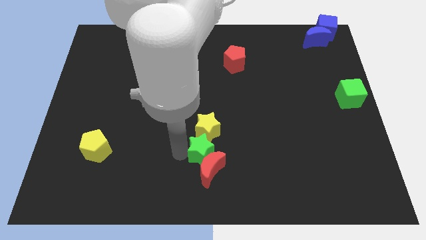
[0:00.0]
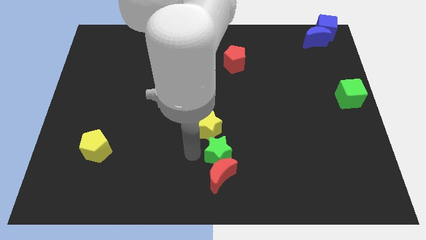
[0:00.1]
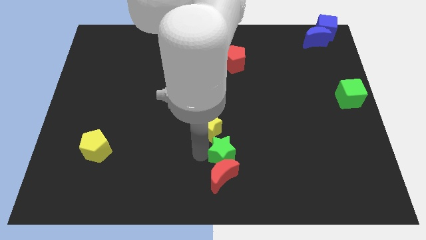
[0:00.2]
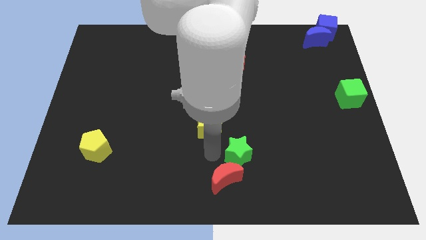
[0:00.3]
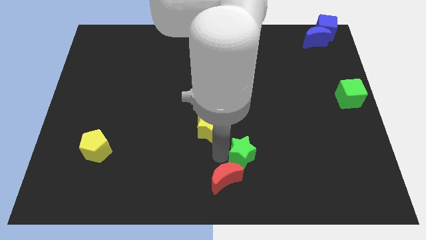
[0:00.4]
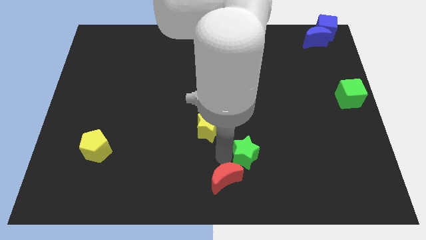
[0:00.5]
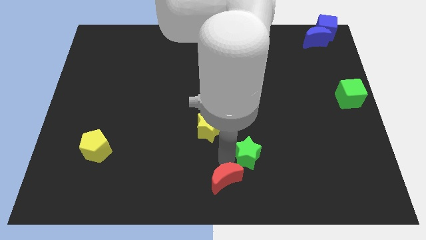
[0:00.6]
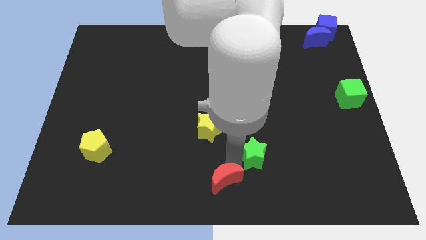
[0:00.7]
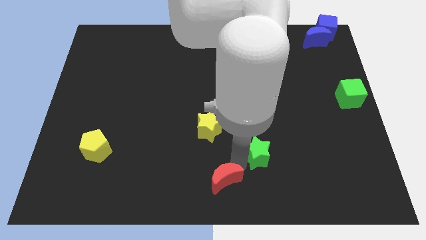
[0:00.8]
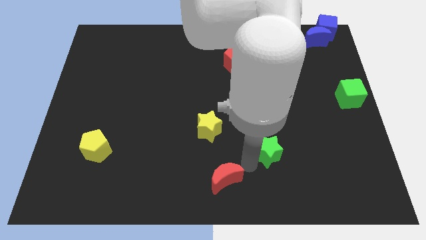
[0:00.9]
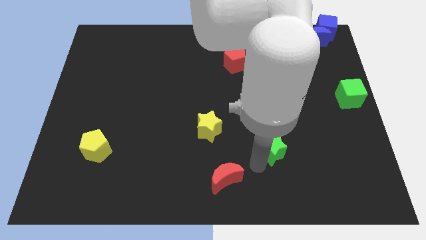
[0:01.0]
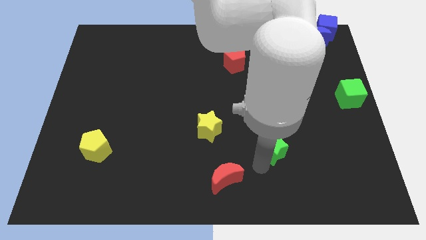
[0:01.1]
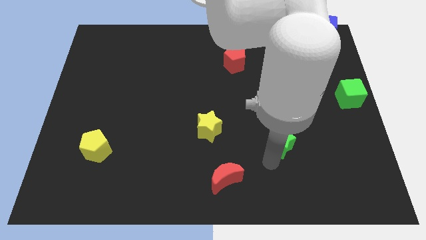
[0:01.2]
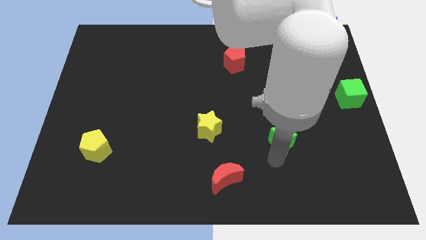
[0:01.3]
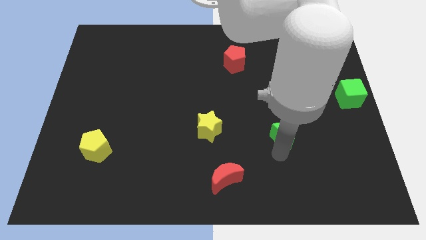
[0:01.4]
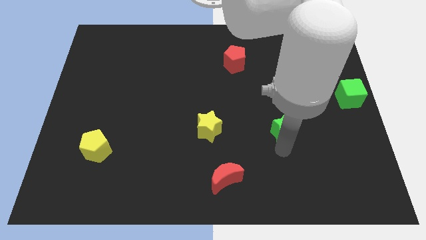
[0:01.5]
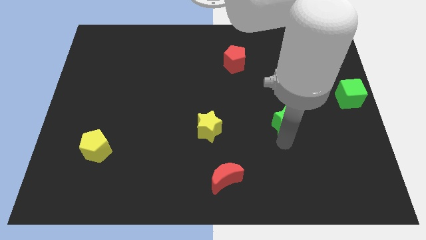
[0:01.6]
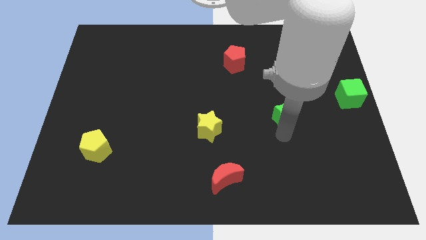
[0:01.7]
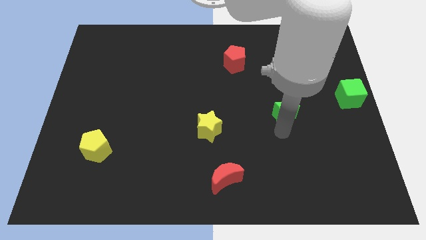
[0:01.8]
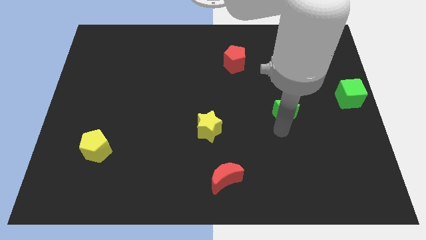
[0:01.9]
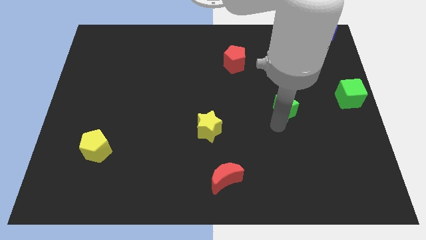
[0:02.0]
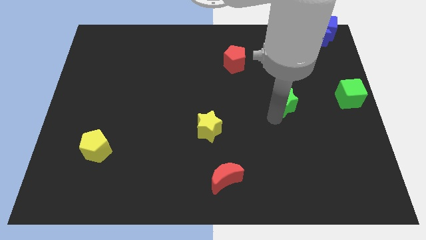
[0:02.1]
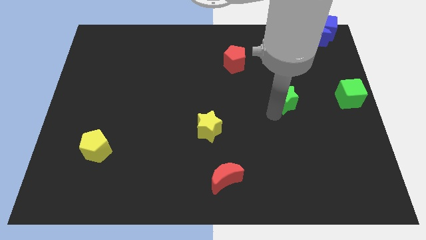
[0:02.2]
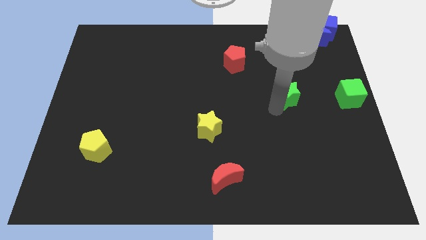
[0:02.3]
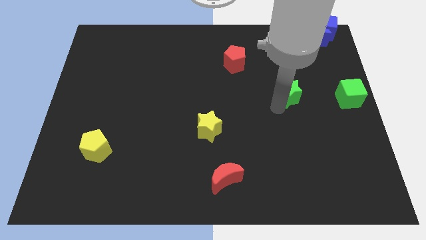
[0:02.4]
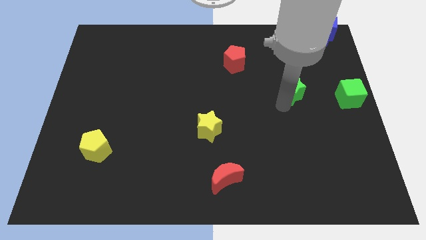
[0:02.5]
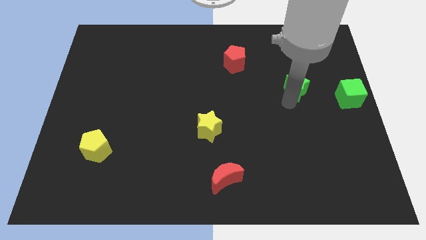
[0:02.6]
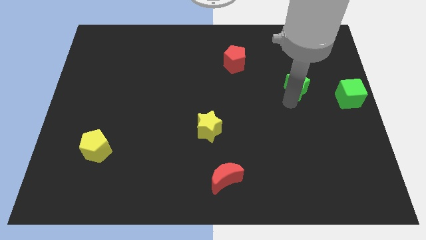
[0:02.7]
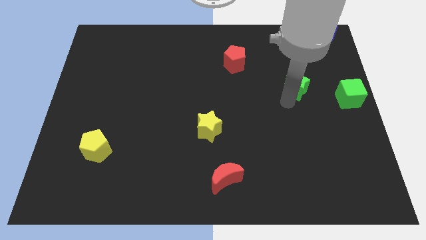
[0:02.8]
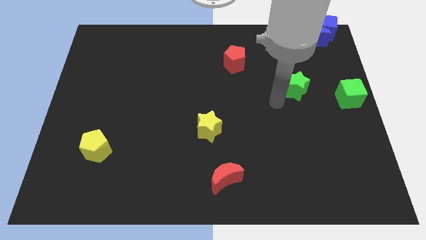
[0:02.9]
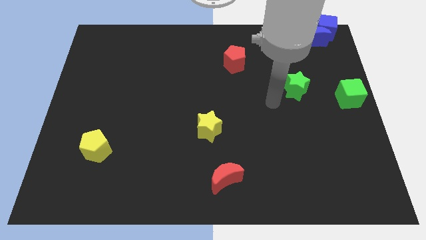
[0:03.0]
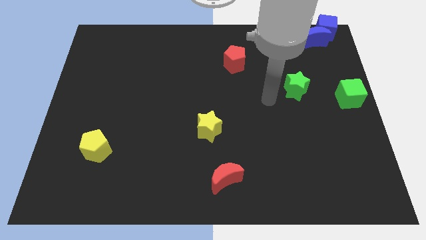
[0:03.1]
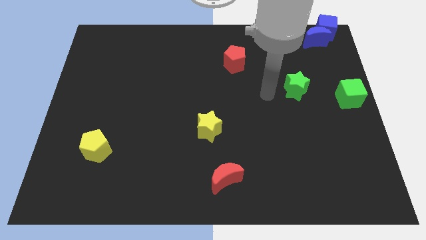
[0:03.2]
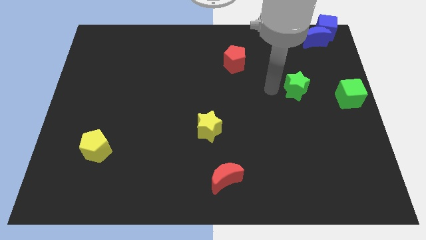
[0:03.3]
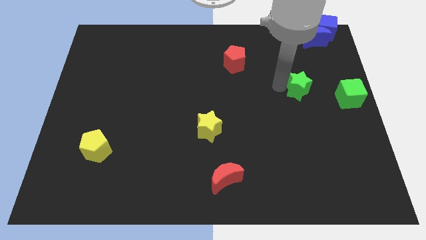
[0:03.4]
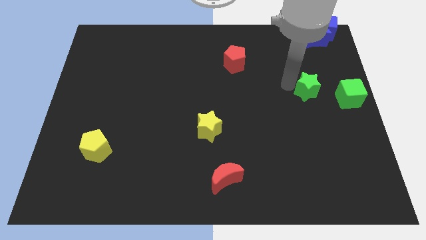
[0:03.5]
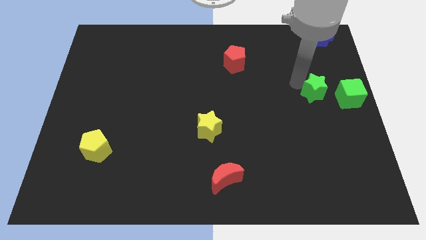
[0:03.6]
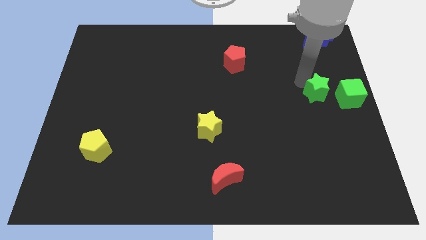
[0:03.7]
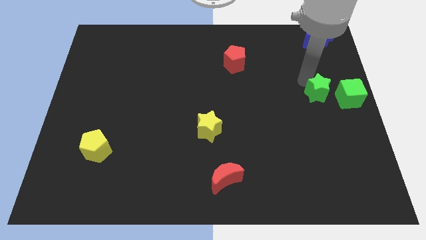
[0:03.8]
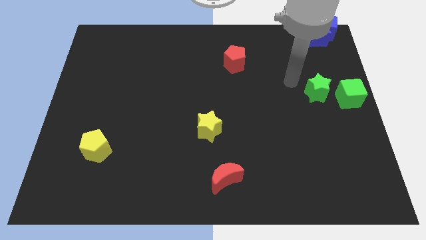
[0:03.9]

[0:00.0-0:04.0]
move the green star towards the left side of the green cube

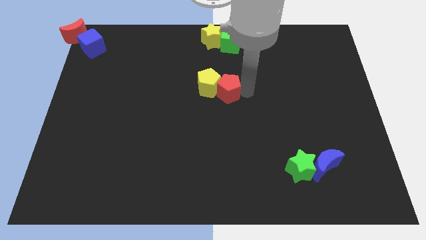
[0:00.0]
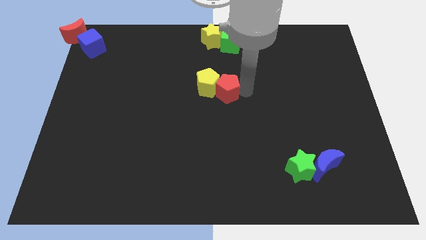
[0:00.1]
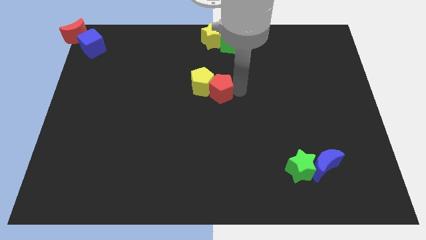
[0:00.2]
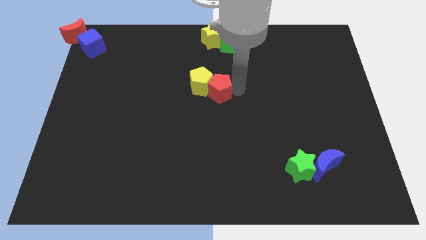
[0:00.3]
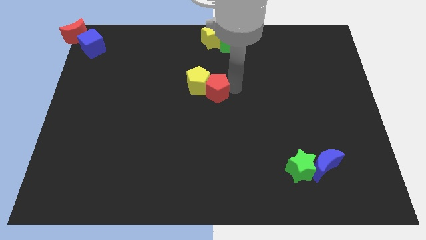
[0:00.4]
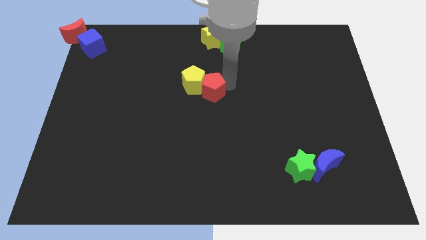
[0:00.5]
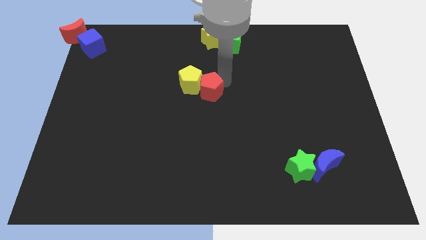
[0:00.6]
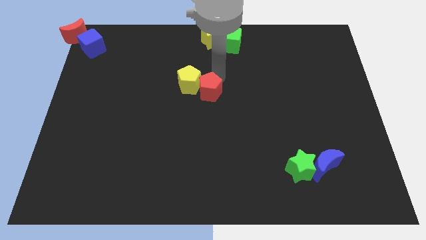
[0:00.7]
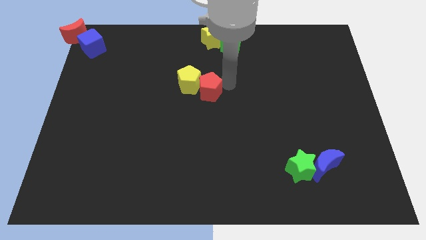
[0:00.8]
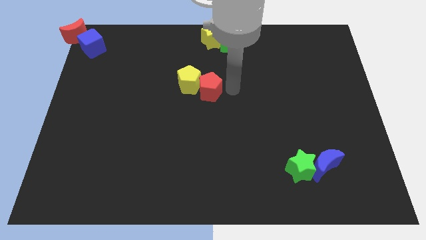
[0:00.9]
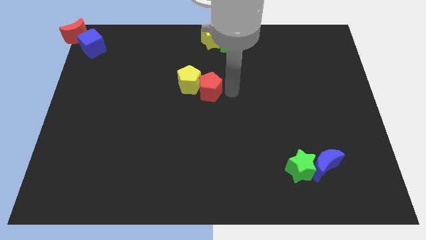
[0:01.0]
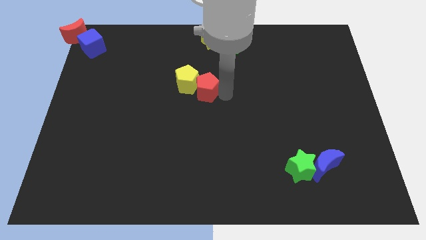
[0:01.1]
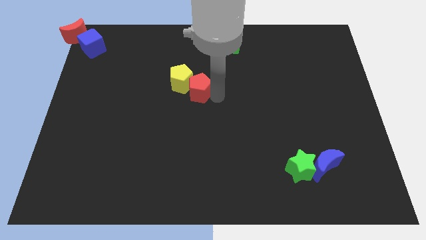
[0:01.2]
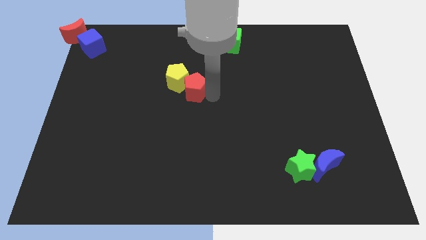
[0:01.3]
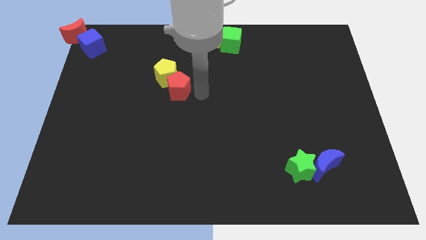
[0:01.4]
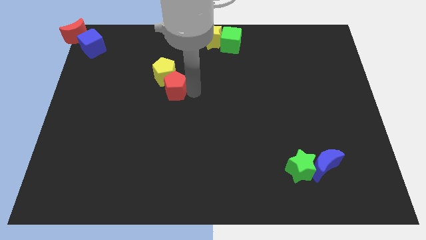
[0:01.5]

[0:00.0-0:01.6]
move the yellow and red pentagons towards the blue cube

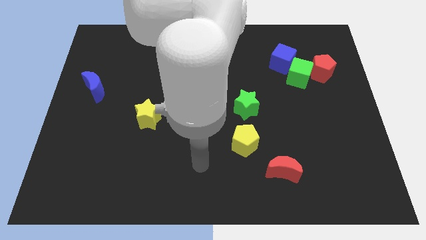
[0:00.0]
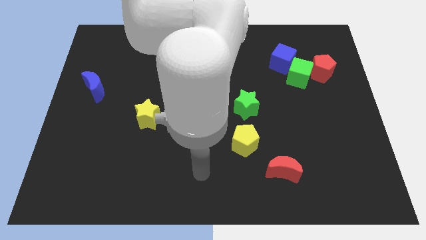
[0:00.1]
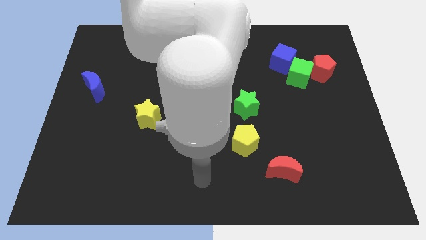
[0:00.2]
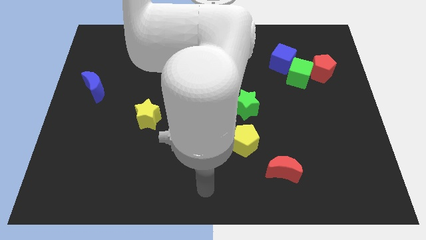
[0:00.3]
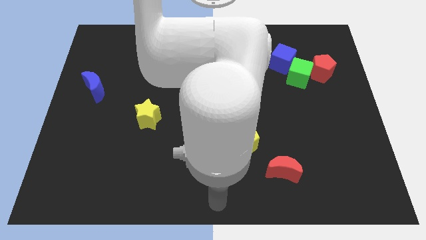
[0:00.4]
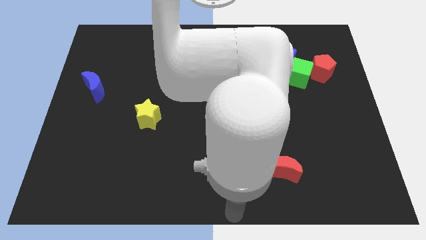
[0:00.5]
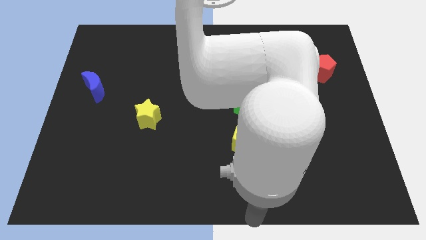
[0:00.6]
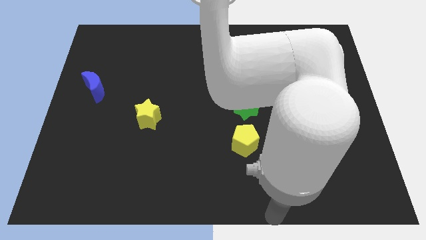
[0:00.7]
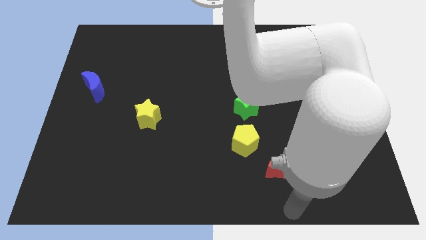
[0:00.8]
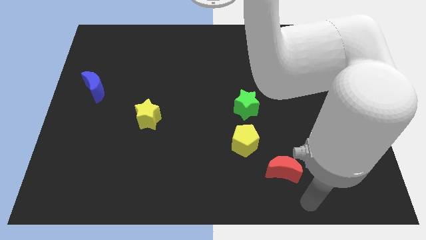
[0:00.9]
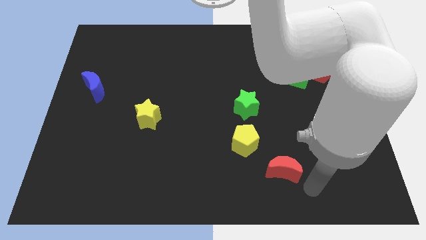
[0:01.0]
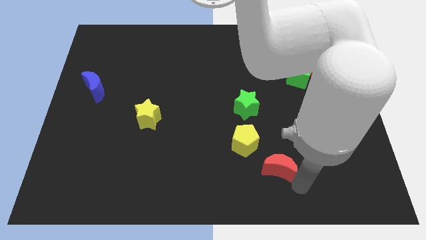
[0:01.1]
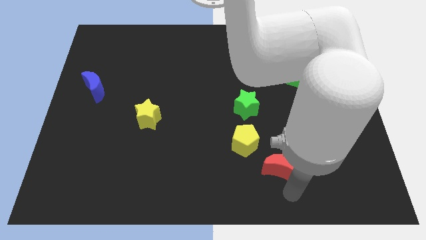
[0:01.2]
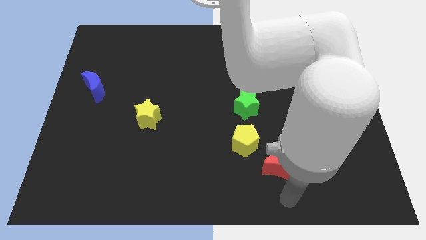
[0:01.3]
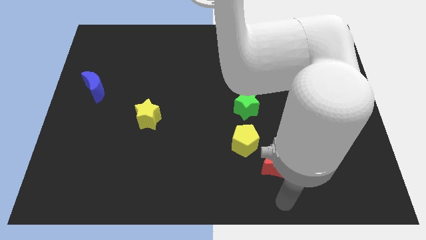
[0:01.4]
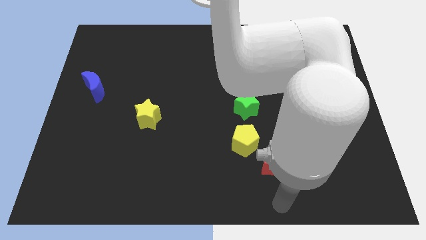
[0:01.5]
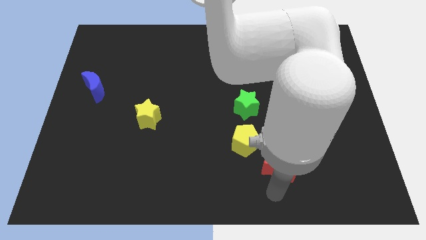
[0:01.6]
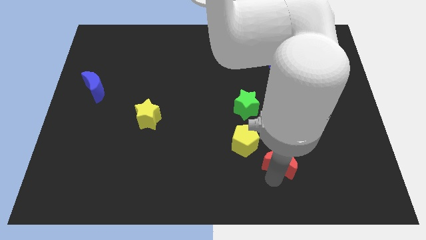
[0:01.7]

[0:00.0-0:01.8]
move your arm towards the red crescent

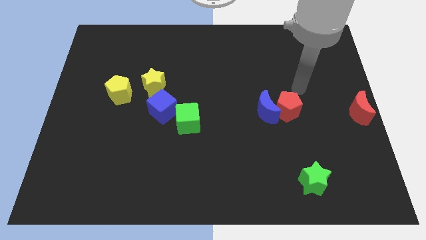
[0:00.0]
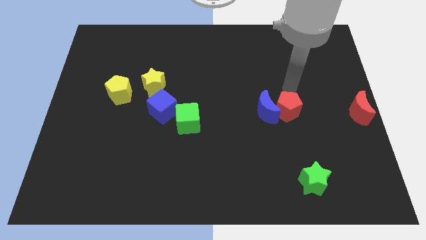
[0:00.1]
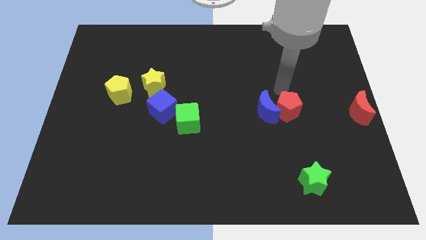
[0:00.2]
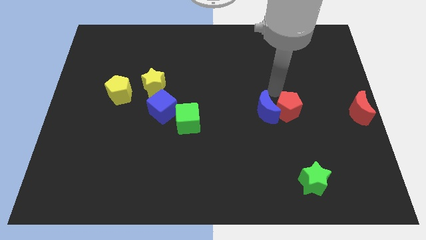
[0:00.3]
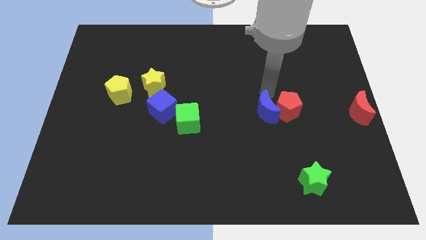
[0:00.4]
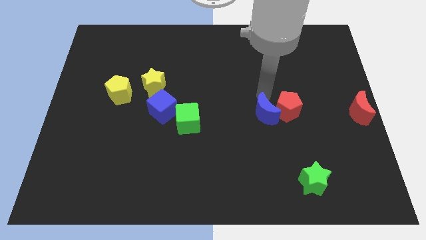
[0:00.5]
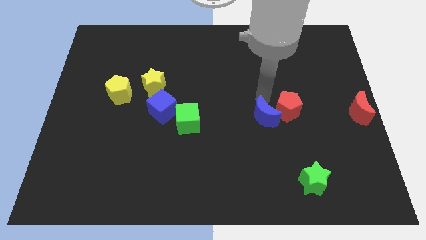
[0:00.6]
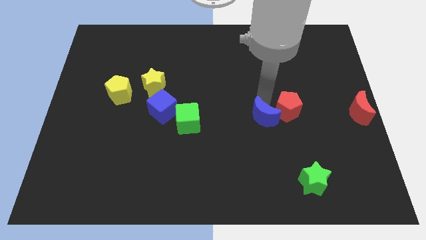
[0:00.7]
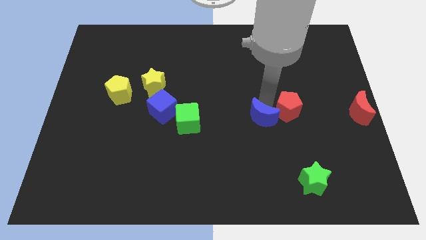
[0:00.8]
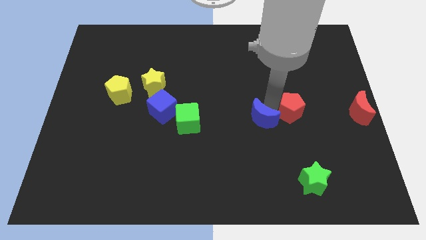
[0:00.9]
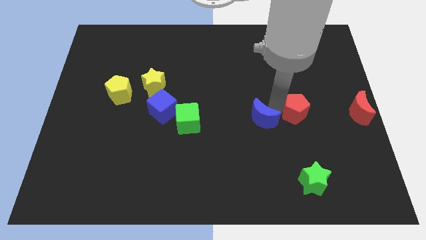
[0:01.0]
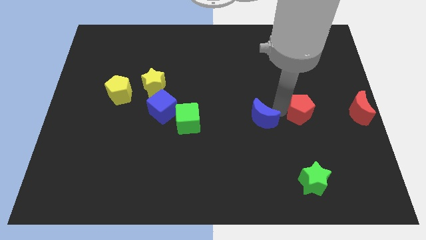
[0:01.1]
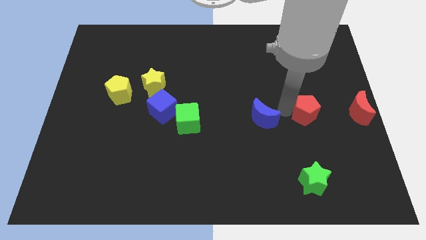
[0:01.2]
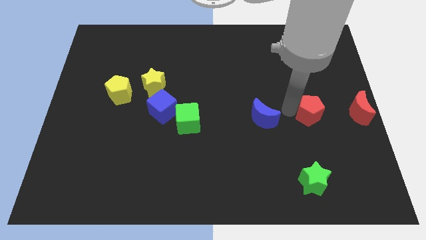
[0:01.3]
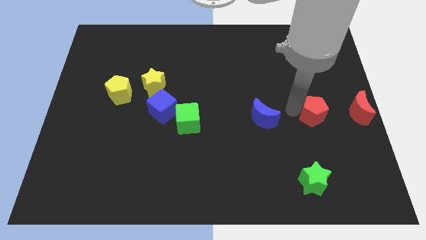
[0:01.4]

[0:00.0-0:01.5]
separate red pentagon from blue moon

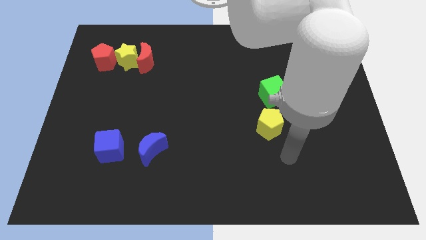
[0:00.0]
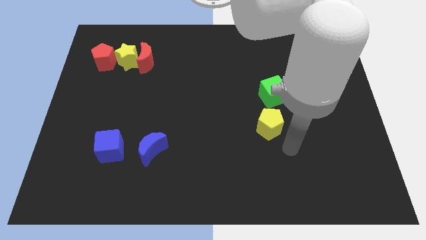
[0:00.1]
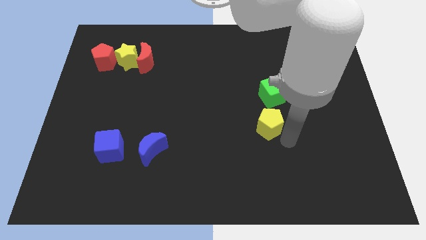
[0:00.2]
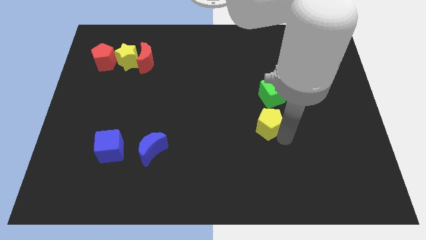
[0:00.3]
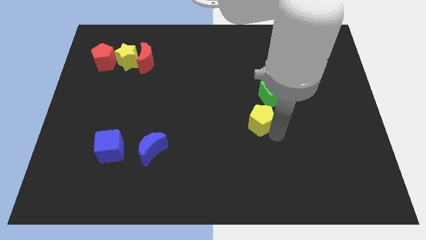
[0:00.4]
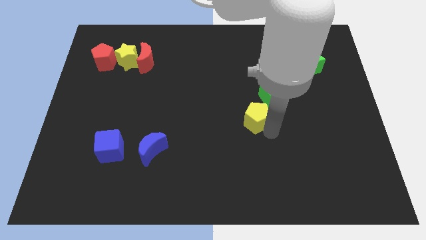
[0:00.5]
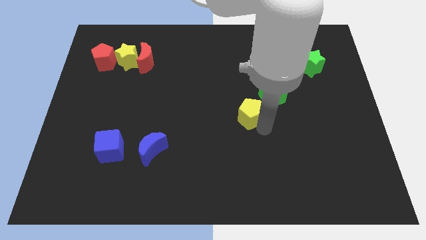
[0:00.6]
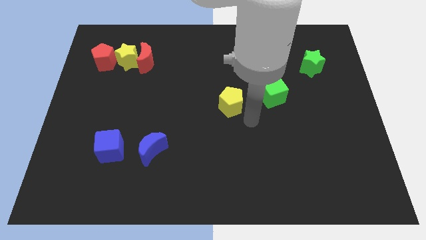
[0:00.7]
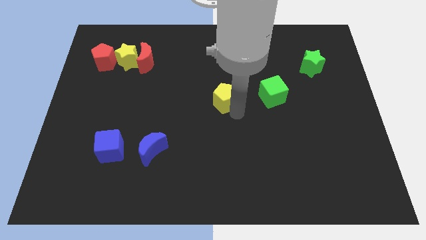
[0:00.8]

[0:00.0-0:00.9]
place the yellow pentagon diagonal to the blue moon
